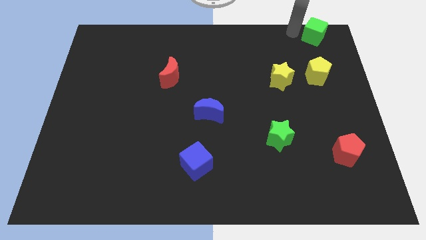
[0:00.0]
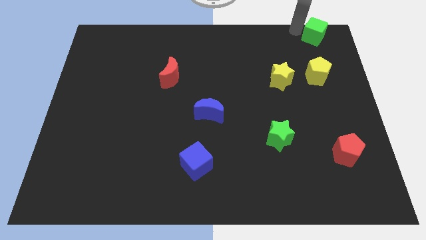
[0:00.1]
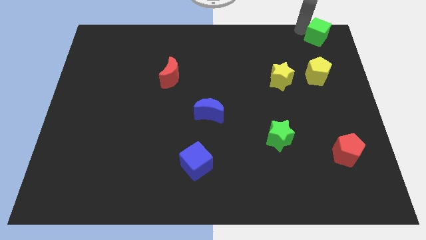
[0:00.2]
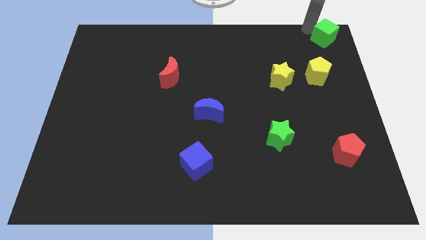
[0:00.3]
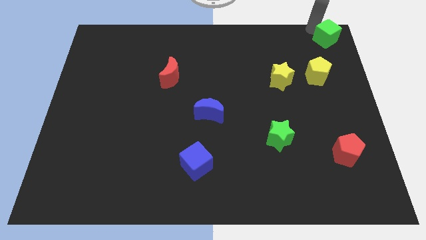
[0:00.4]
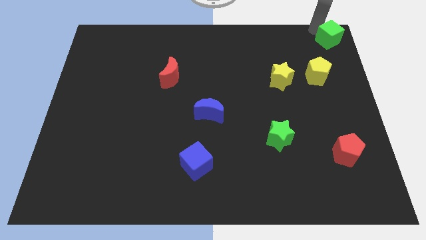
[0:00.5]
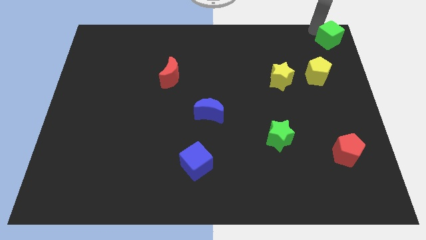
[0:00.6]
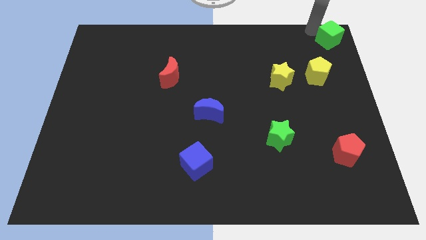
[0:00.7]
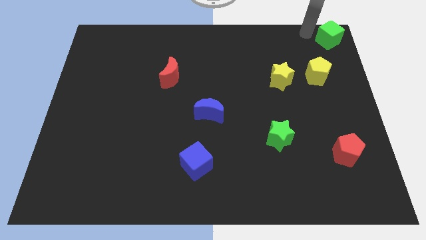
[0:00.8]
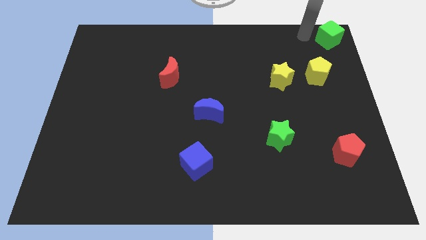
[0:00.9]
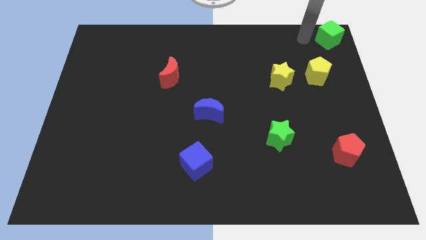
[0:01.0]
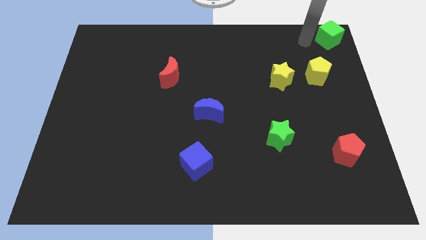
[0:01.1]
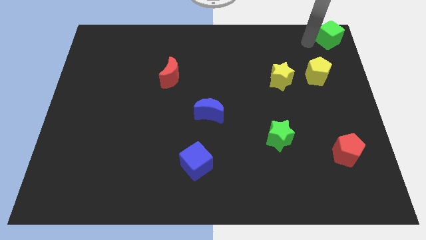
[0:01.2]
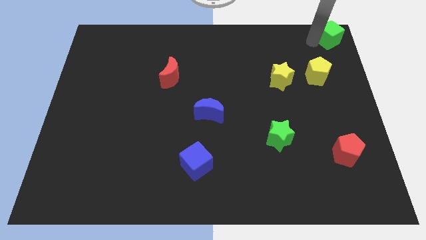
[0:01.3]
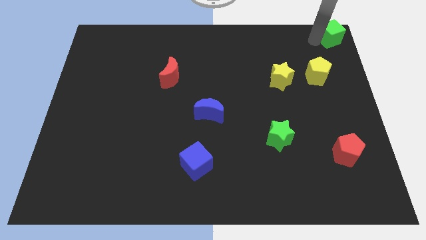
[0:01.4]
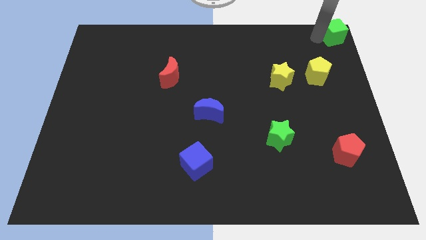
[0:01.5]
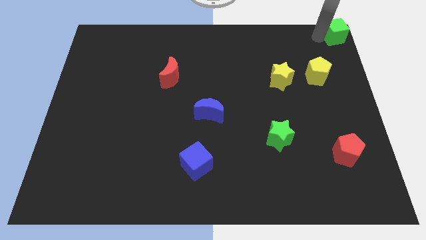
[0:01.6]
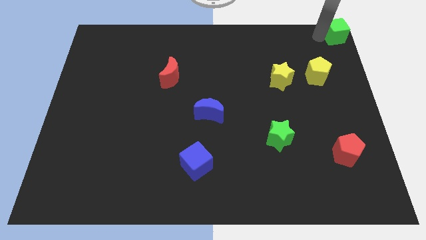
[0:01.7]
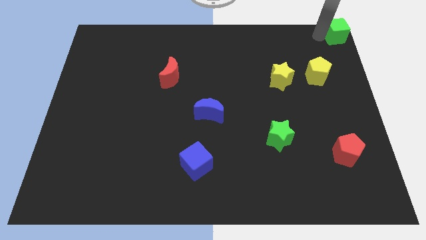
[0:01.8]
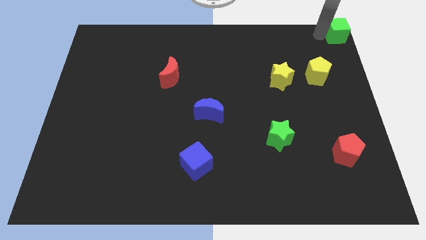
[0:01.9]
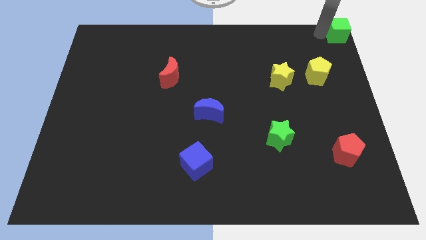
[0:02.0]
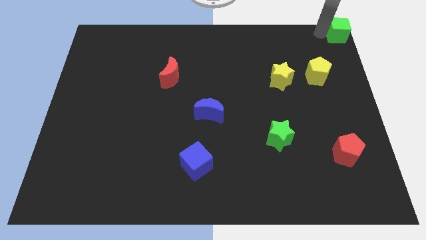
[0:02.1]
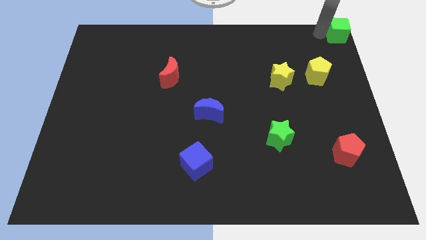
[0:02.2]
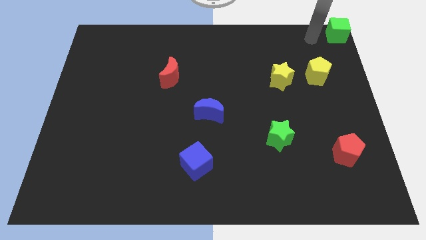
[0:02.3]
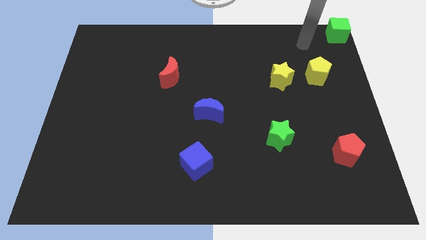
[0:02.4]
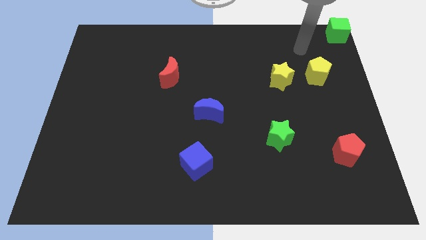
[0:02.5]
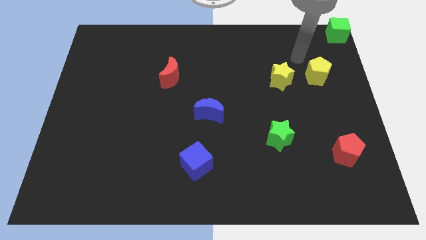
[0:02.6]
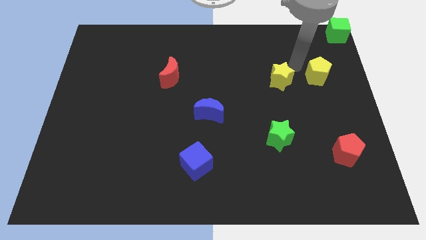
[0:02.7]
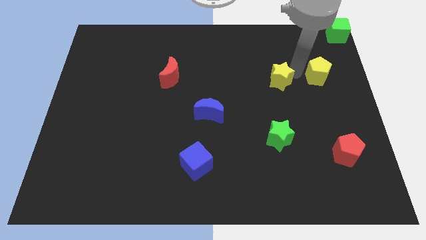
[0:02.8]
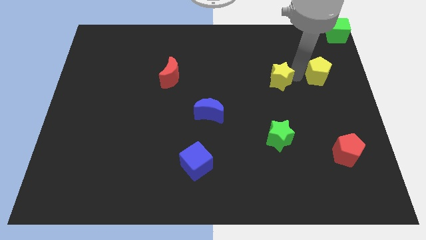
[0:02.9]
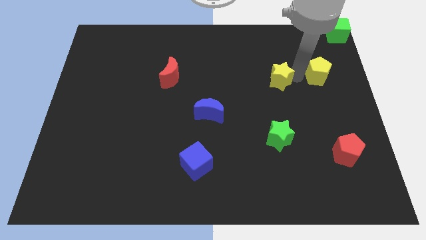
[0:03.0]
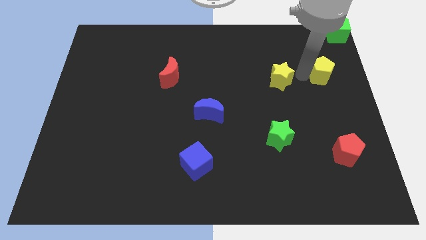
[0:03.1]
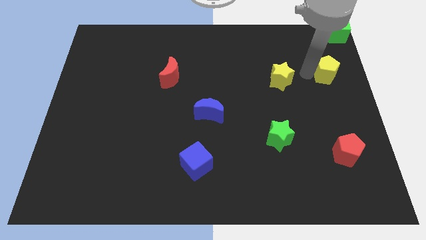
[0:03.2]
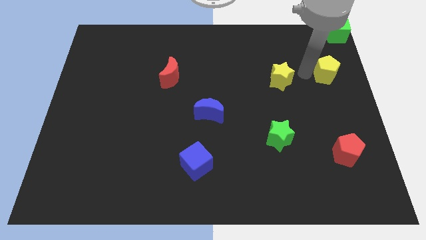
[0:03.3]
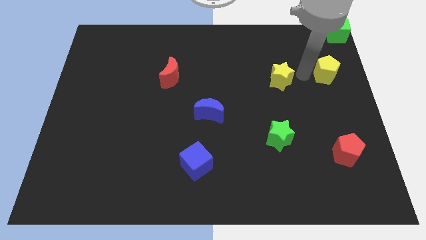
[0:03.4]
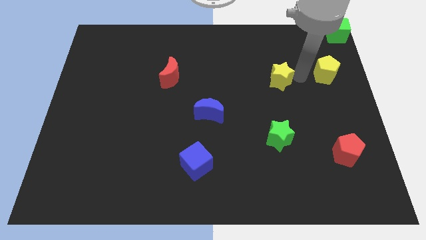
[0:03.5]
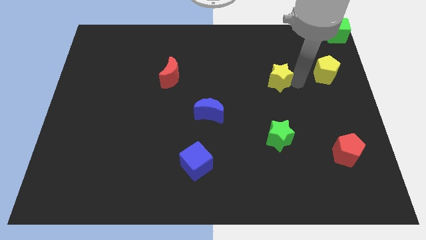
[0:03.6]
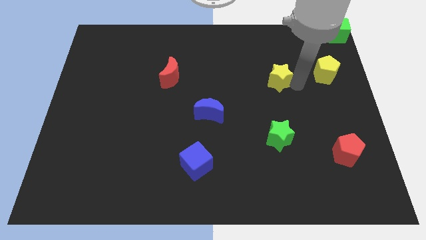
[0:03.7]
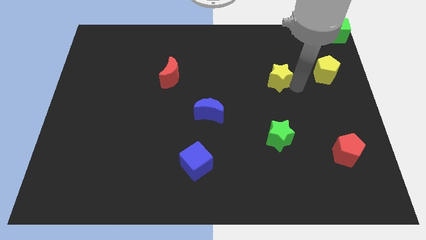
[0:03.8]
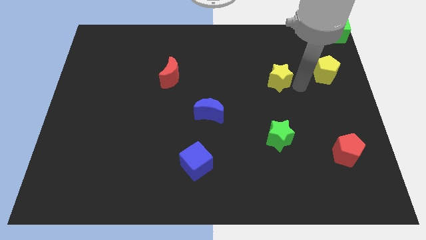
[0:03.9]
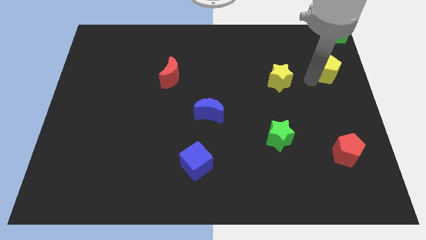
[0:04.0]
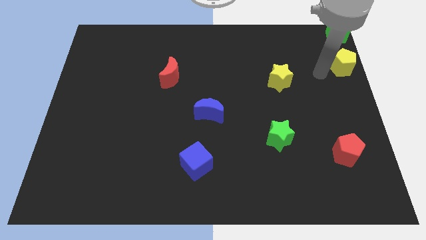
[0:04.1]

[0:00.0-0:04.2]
move the yellow pentagon below the green cube

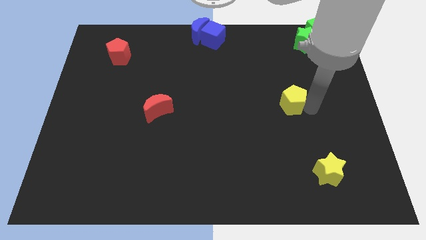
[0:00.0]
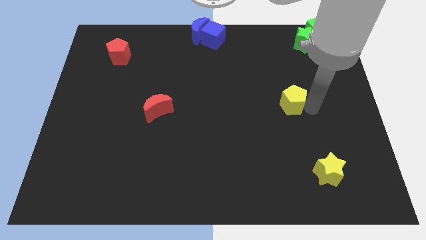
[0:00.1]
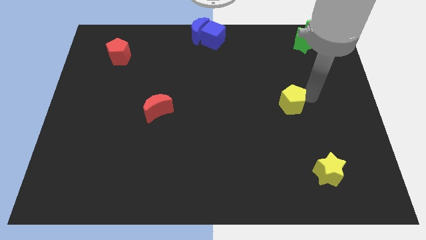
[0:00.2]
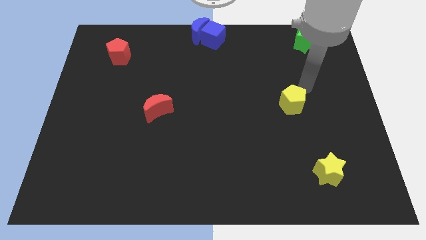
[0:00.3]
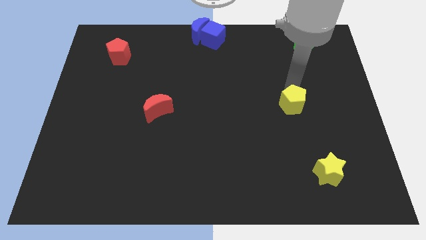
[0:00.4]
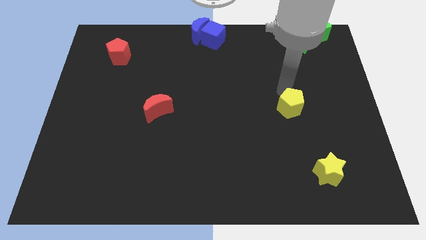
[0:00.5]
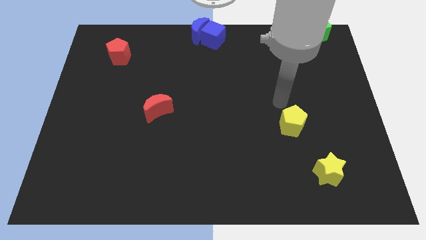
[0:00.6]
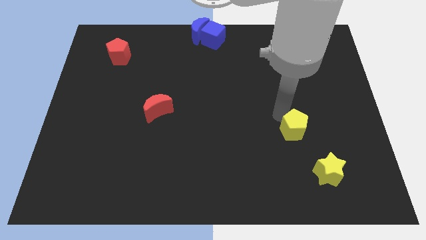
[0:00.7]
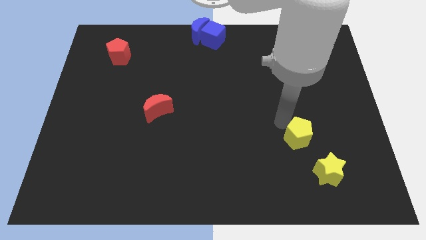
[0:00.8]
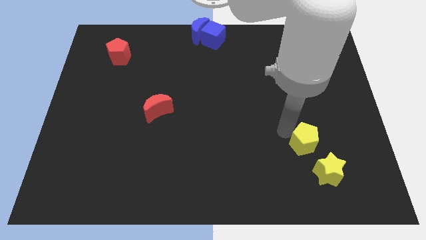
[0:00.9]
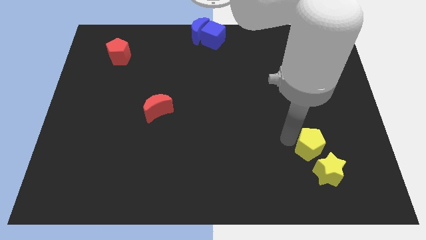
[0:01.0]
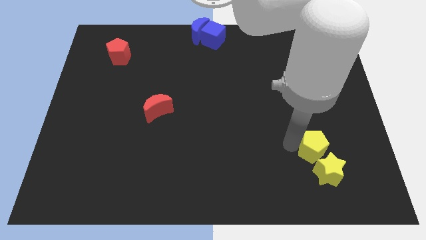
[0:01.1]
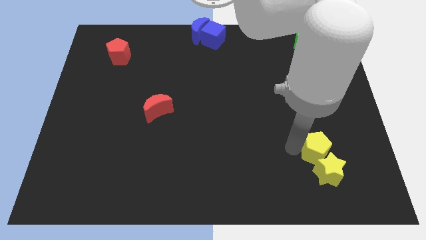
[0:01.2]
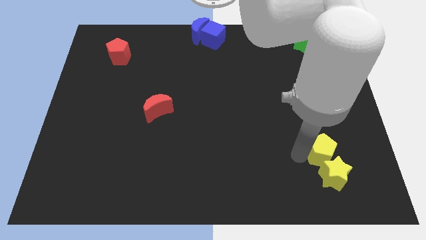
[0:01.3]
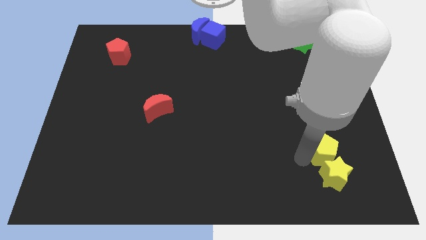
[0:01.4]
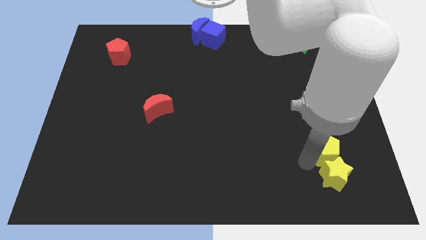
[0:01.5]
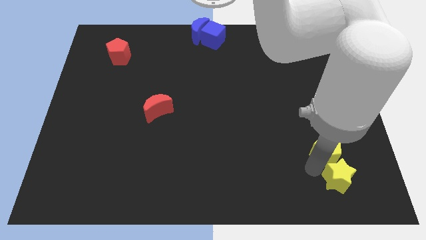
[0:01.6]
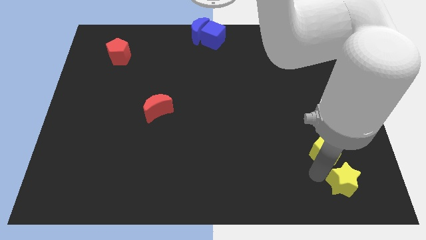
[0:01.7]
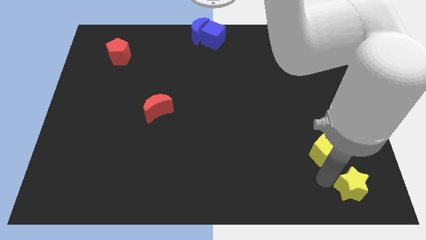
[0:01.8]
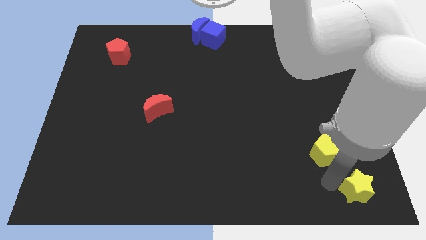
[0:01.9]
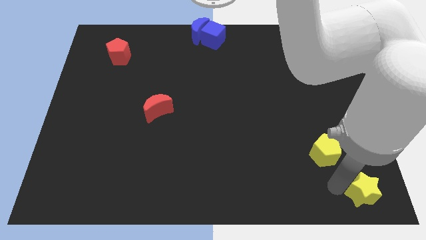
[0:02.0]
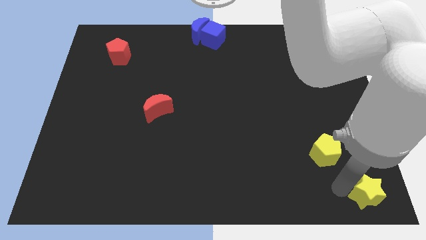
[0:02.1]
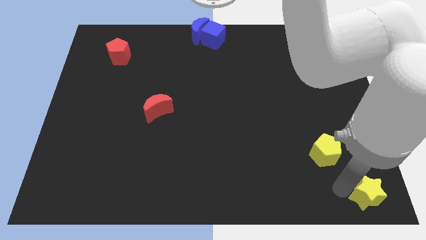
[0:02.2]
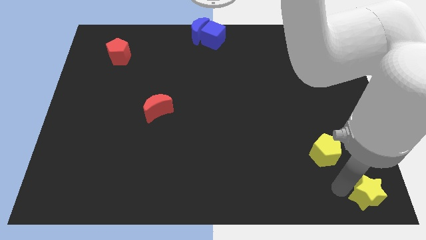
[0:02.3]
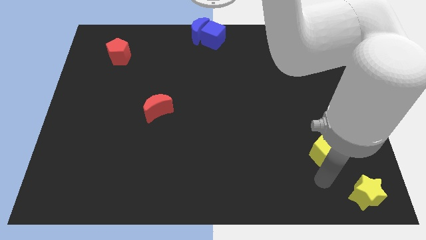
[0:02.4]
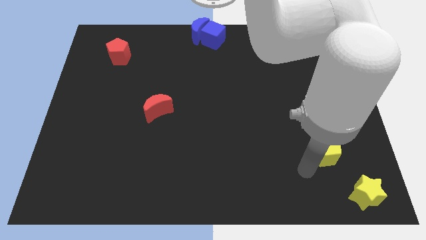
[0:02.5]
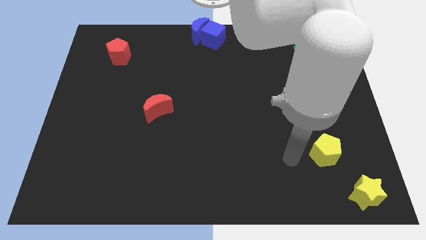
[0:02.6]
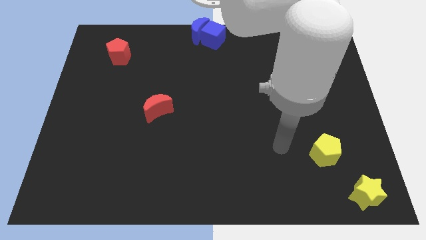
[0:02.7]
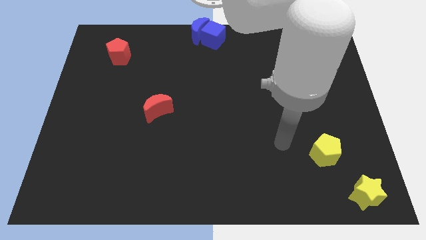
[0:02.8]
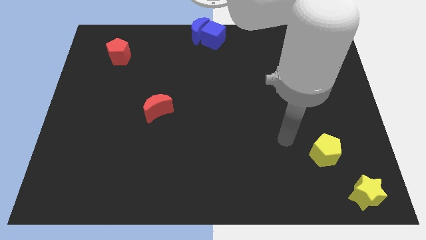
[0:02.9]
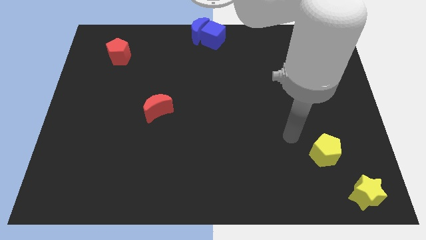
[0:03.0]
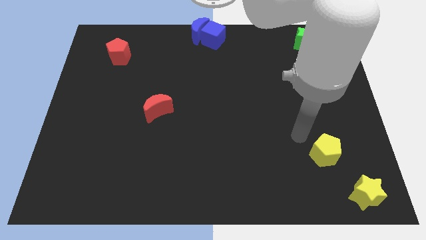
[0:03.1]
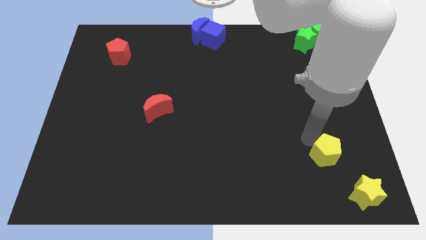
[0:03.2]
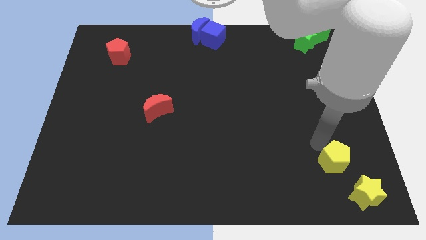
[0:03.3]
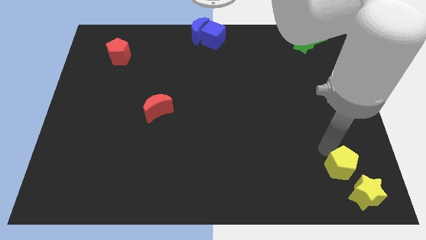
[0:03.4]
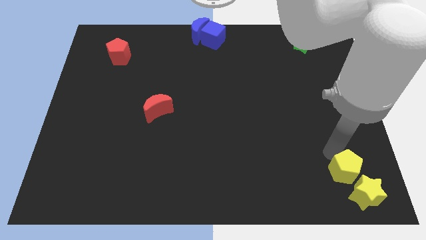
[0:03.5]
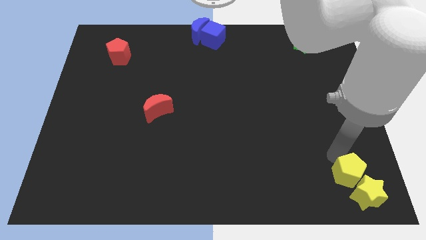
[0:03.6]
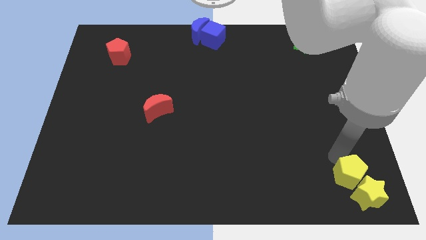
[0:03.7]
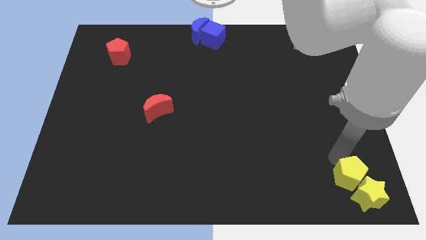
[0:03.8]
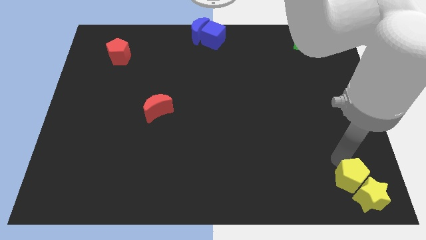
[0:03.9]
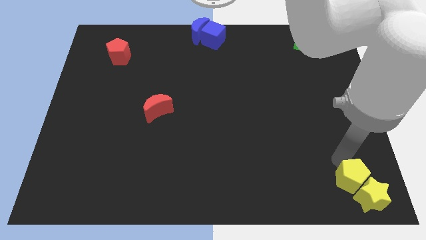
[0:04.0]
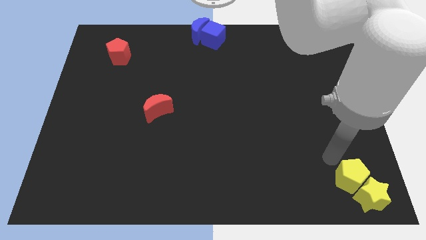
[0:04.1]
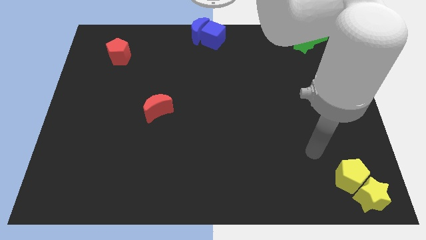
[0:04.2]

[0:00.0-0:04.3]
push the yellow pentagon into the yellow star

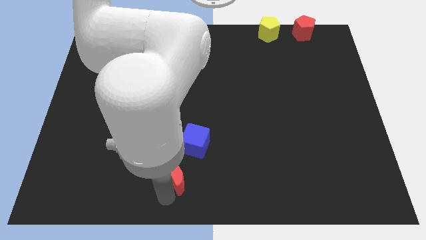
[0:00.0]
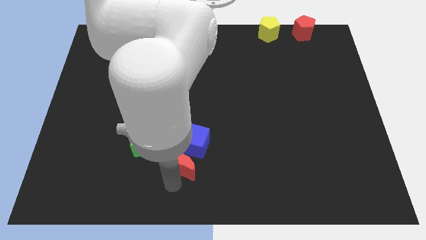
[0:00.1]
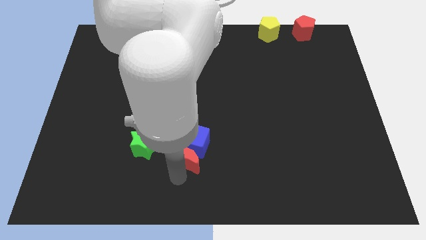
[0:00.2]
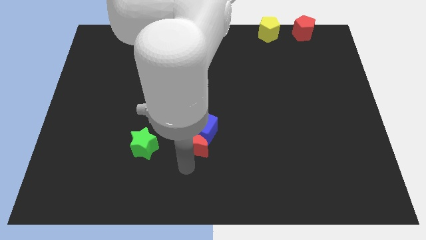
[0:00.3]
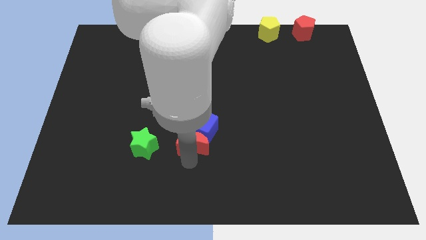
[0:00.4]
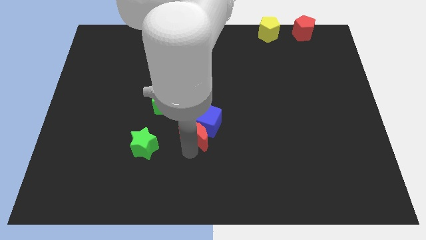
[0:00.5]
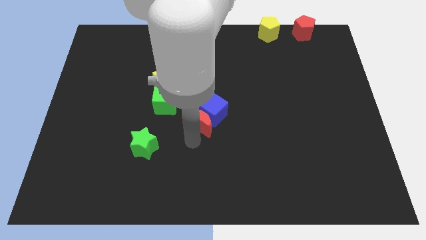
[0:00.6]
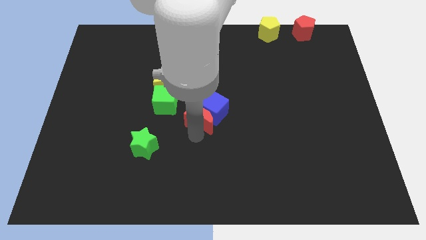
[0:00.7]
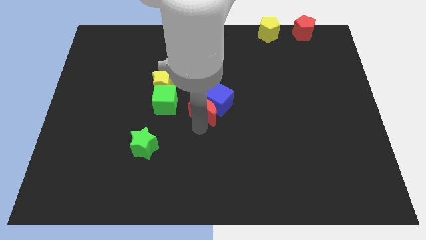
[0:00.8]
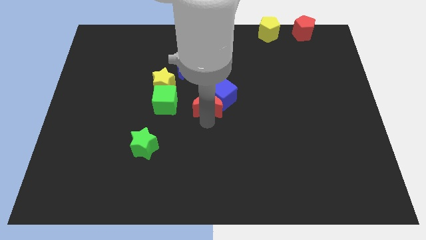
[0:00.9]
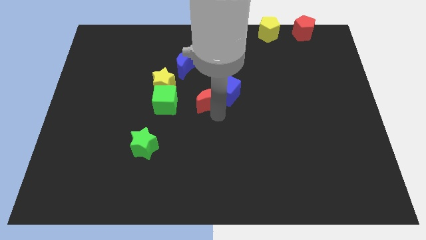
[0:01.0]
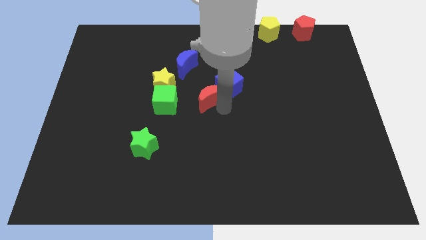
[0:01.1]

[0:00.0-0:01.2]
drag the red moon and blue cube to the center of the board
